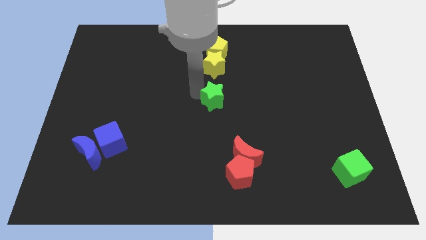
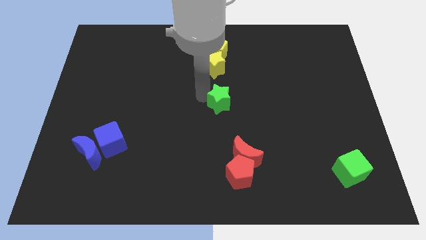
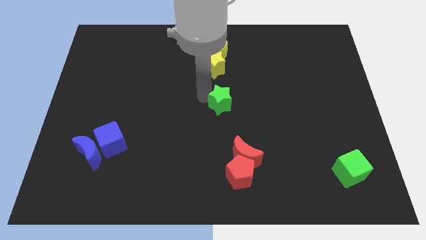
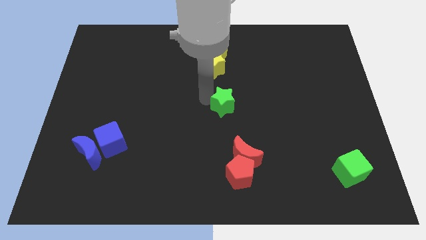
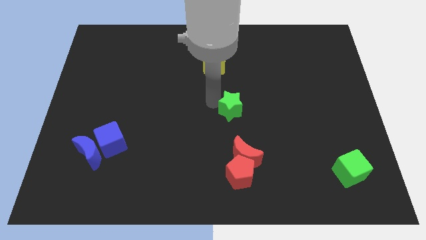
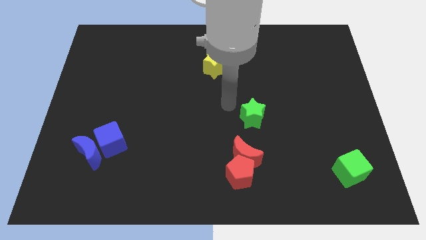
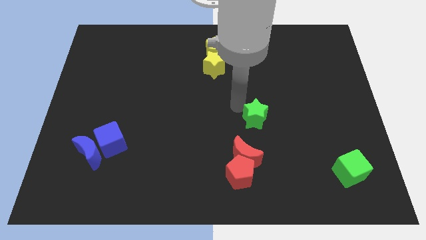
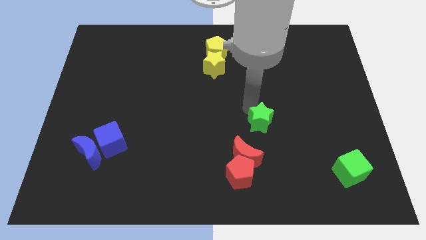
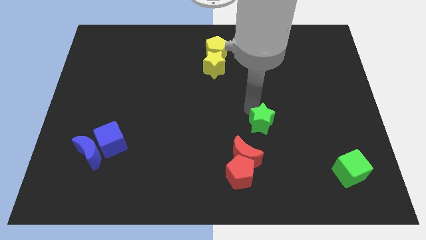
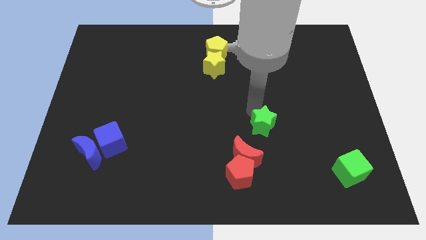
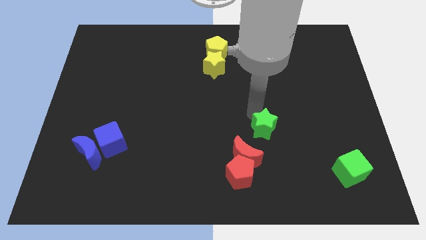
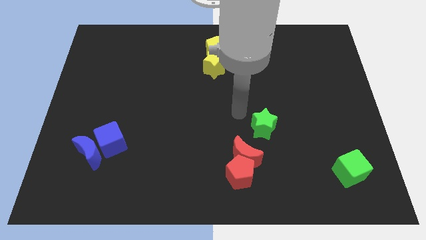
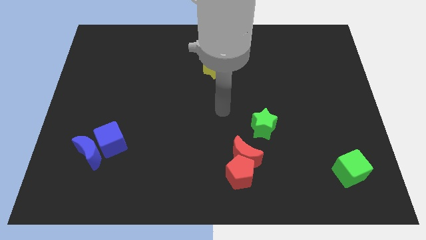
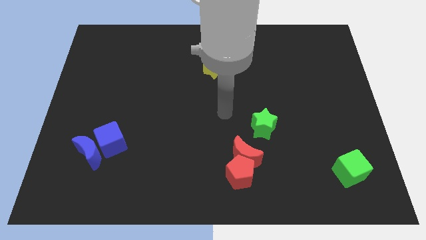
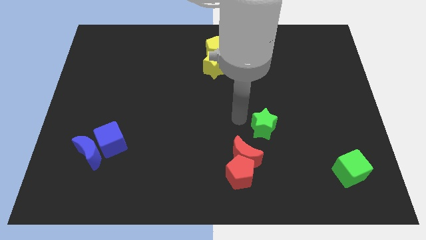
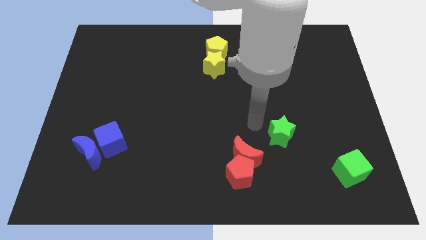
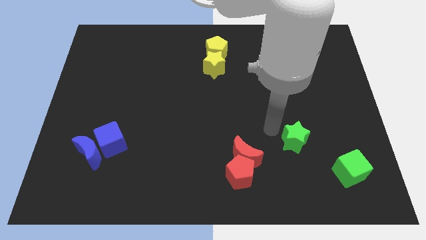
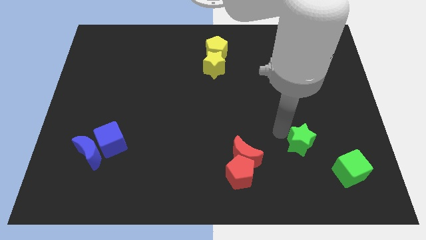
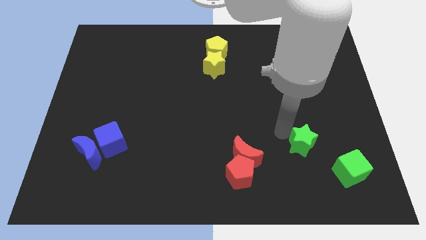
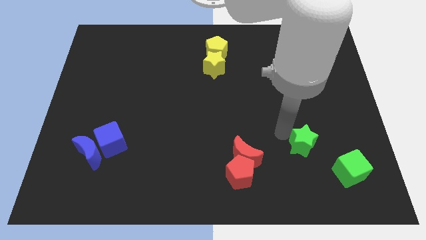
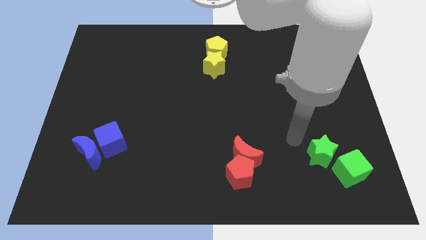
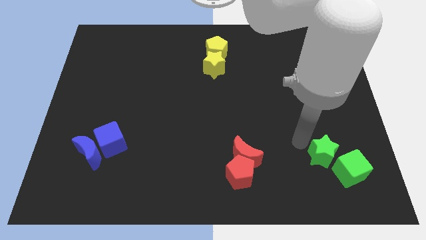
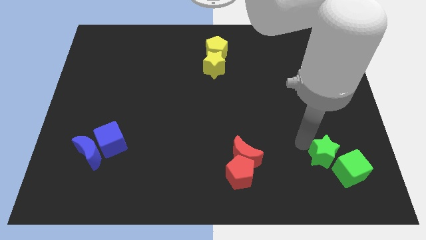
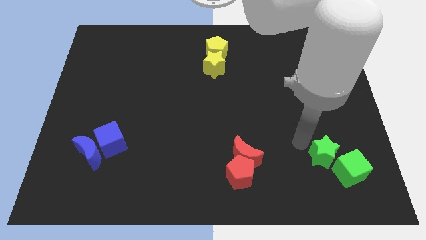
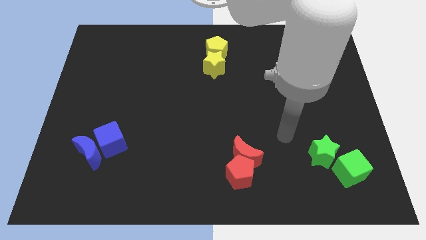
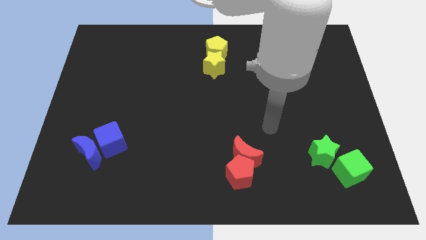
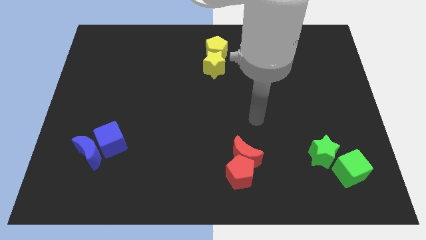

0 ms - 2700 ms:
slide the green star close to the green cube

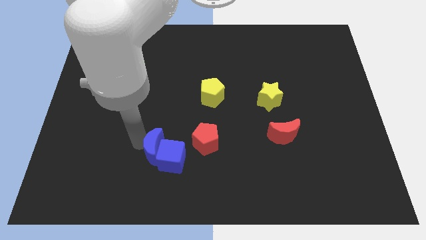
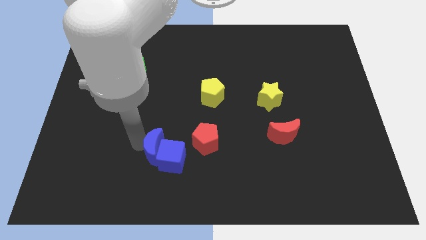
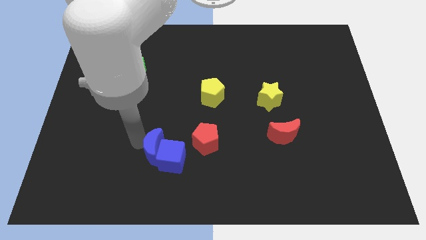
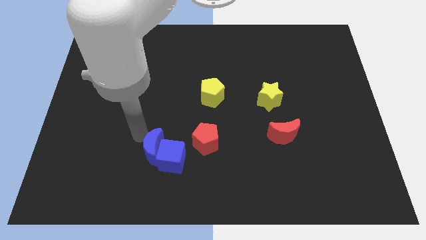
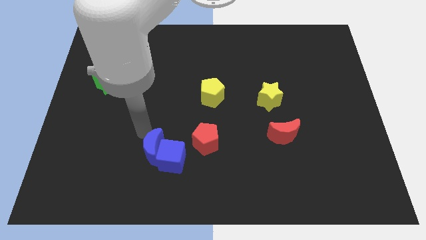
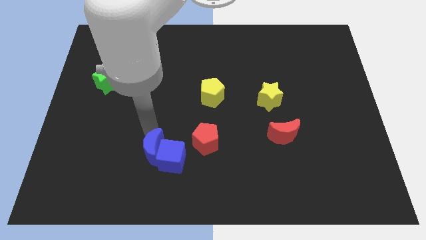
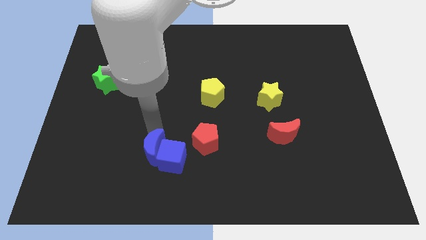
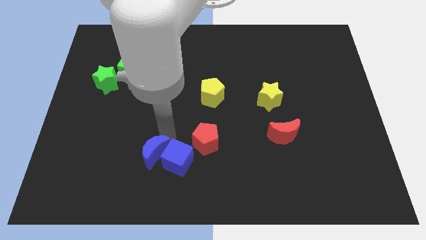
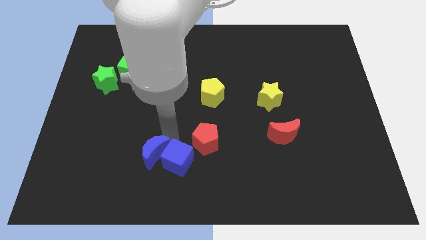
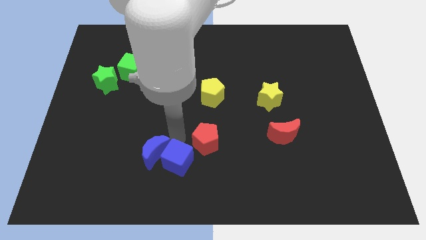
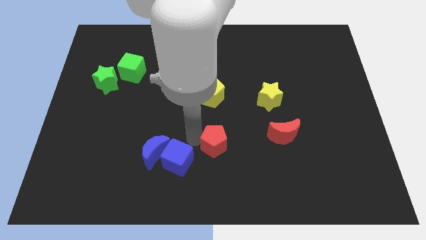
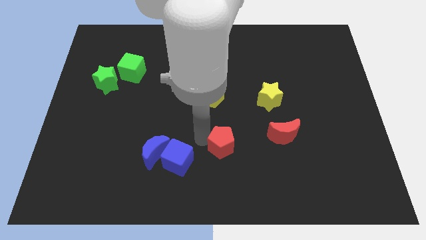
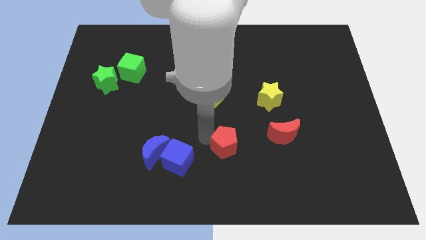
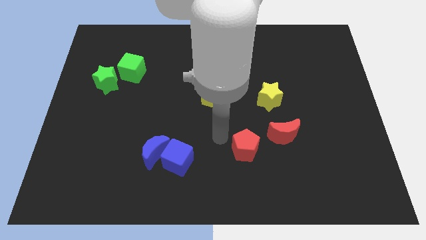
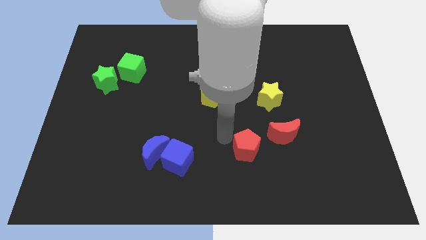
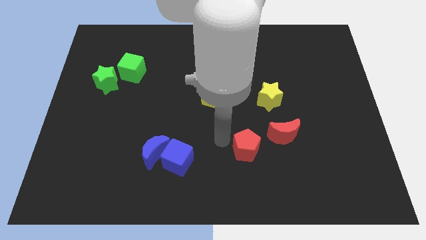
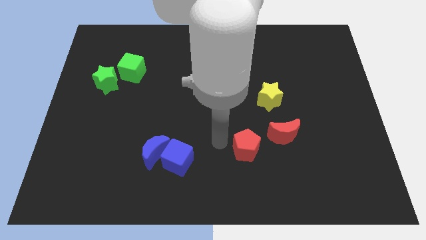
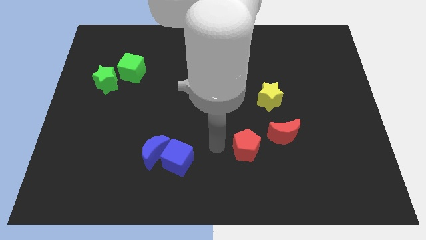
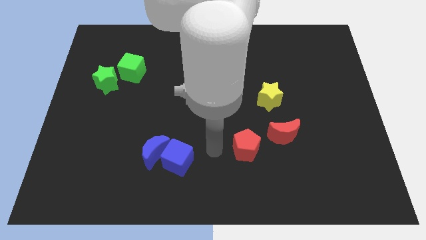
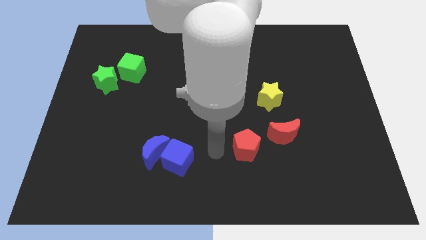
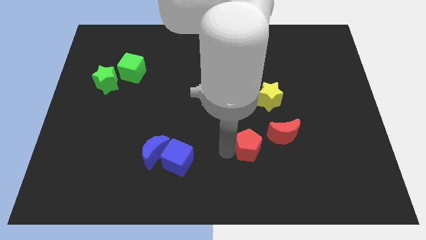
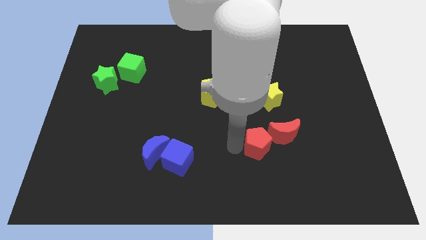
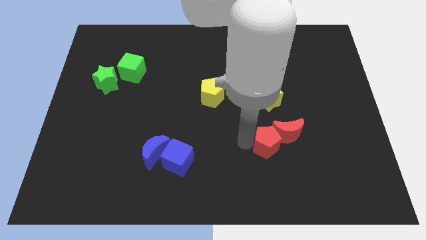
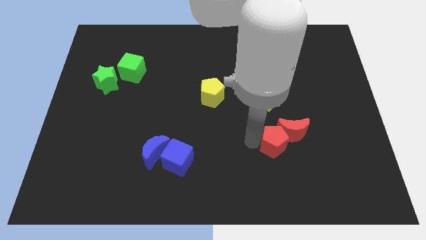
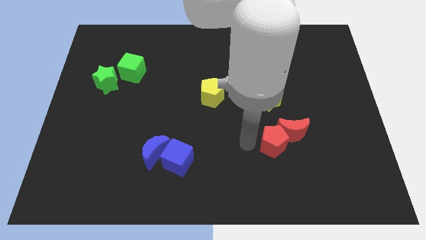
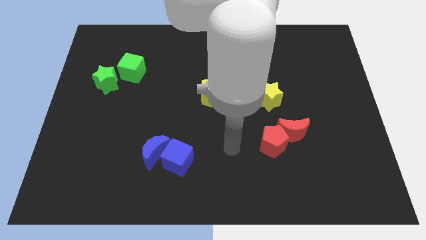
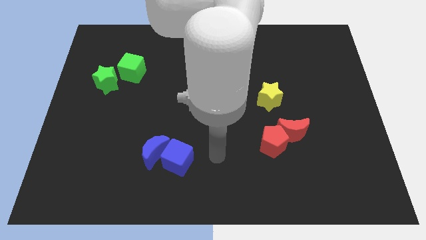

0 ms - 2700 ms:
push the red pentagon into the red moon

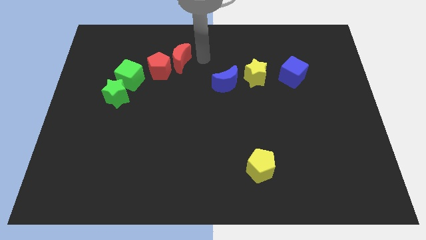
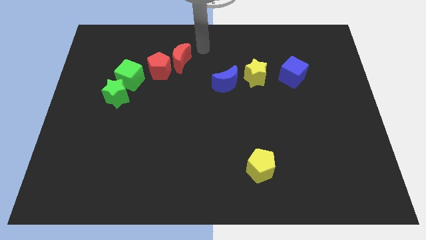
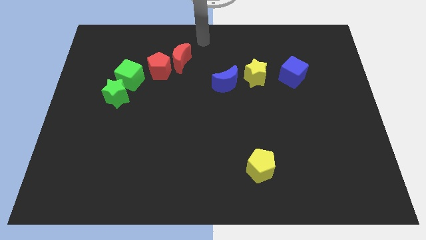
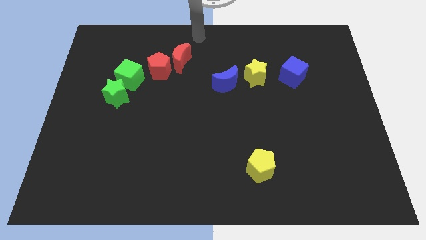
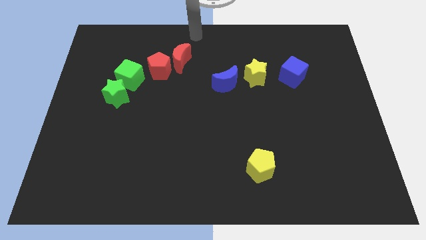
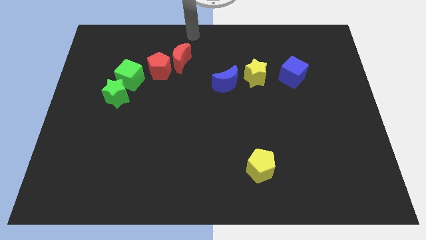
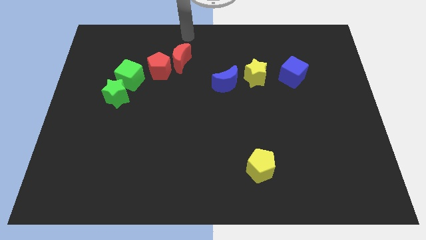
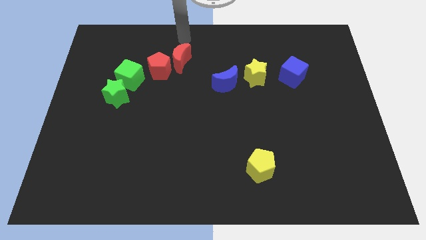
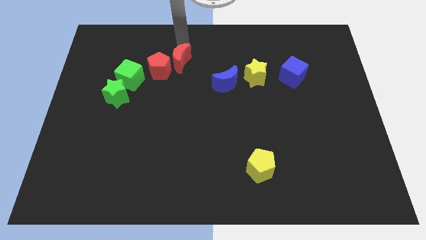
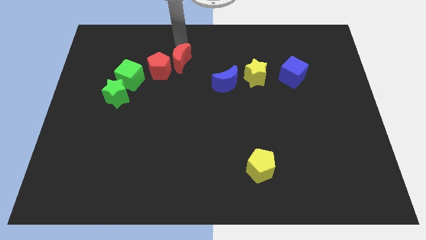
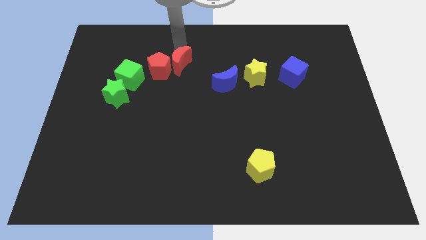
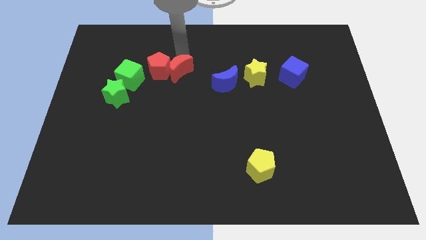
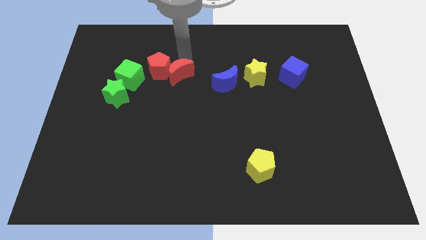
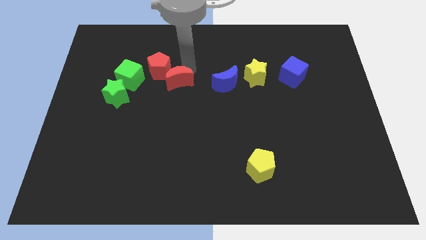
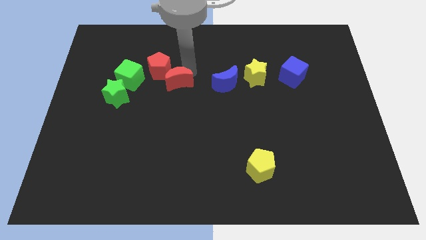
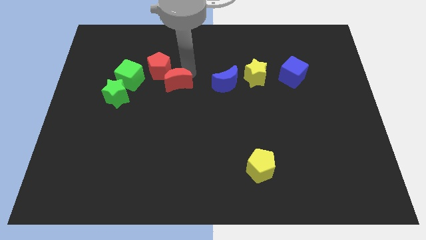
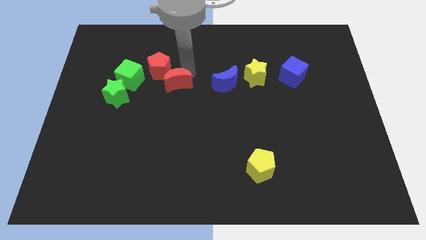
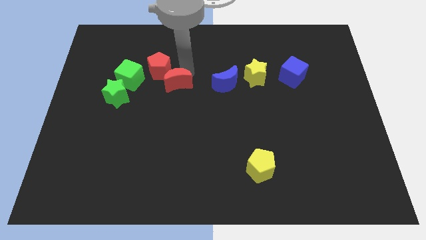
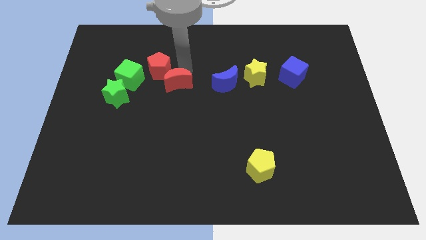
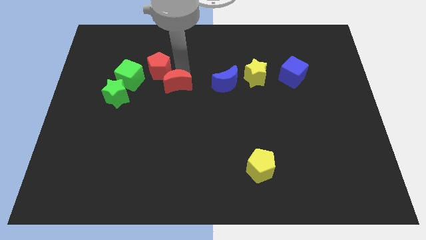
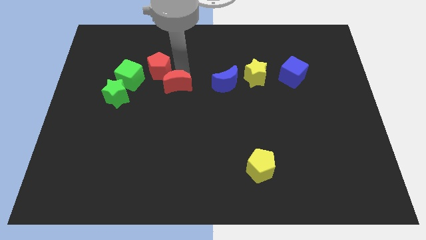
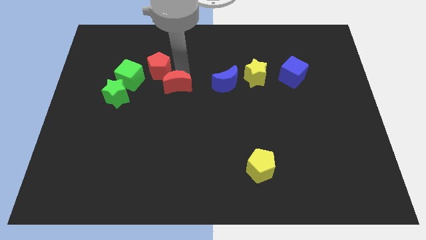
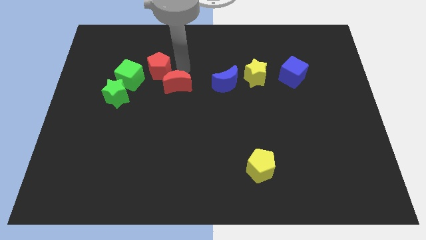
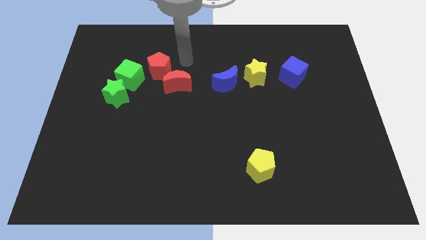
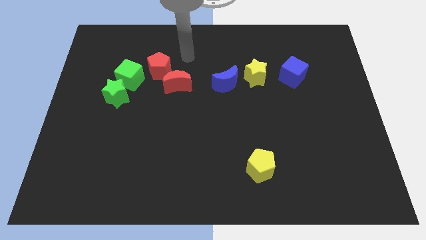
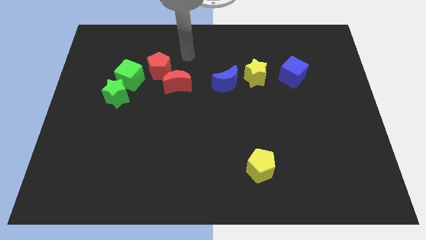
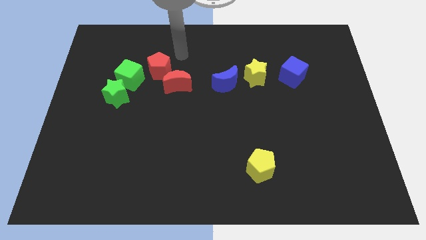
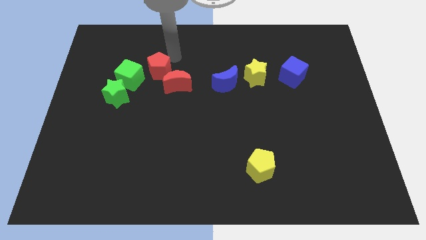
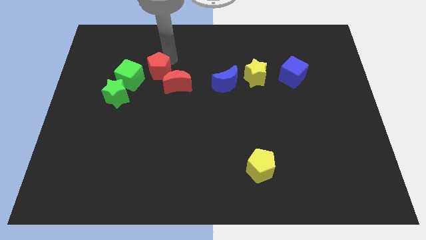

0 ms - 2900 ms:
move the red crescent to the left of the blue crescent

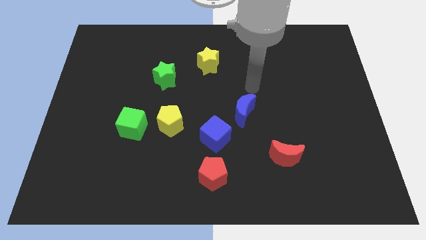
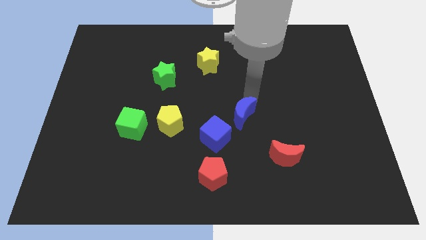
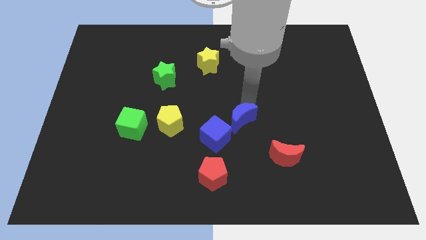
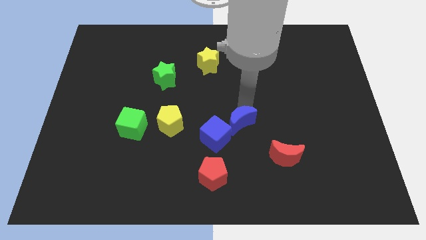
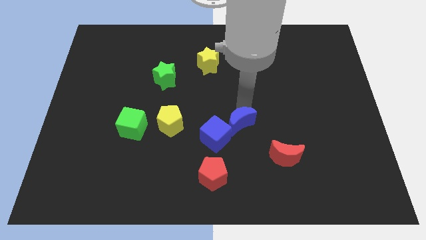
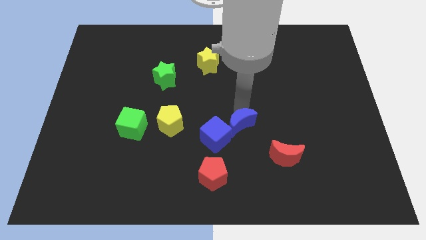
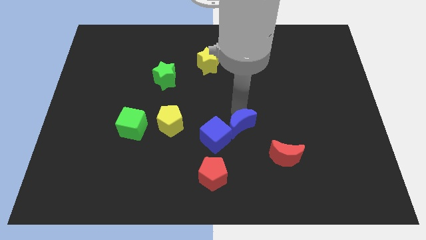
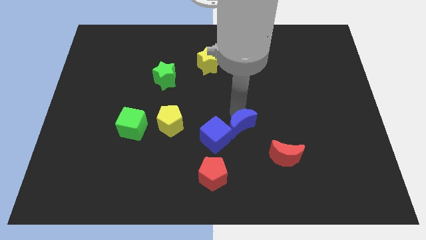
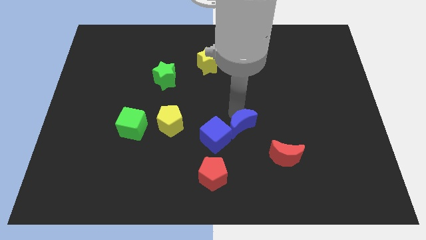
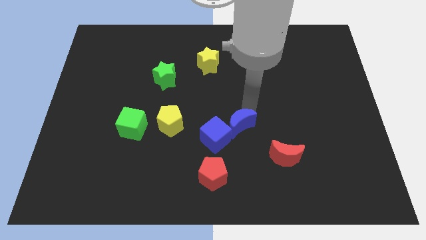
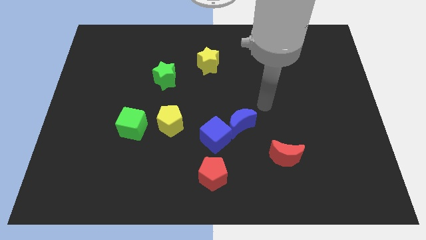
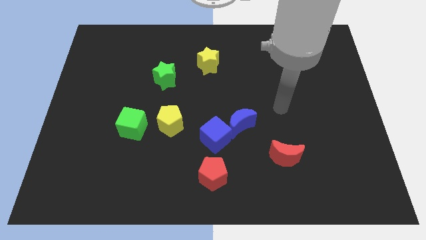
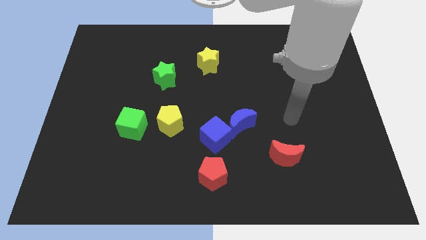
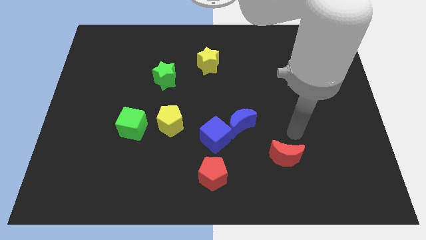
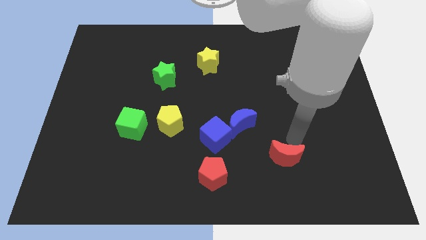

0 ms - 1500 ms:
push the blue into the blue cube
